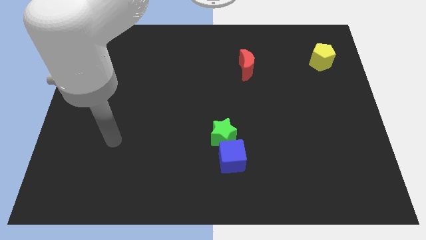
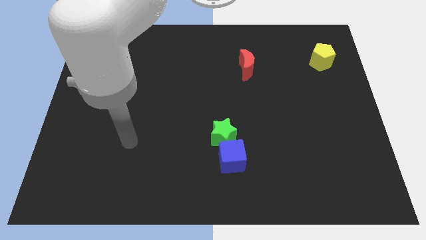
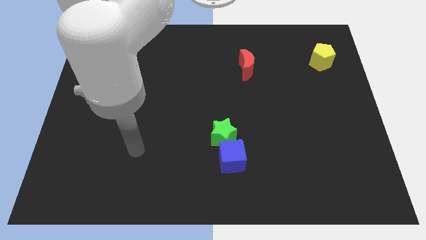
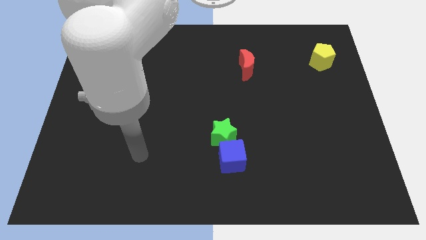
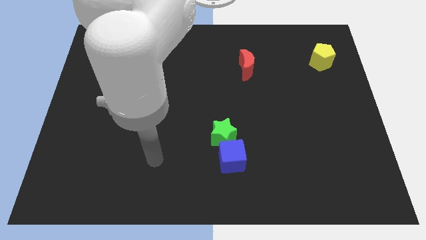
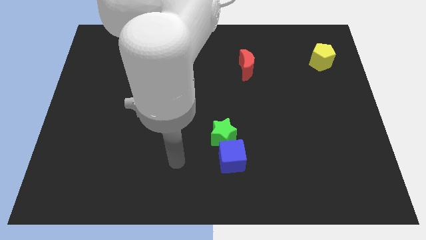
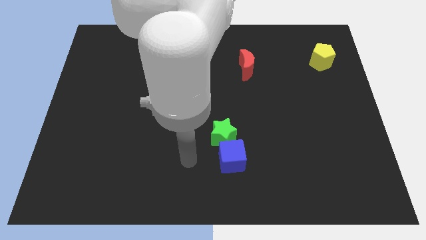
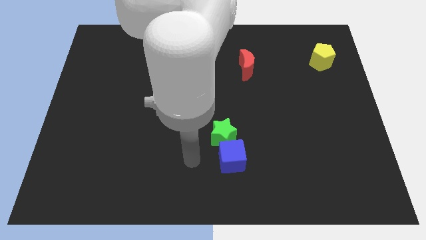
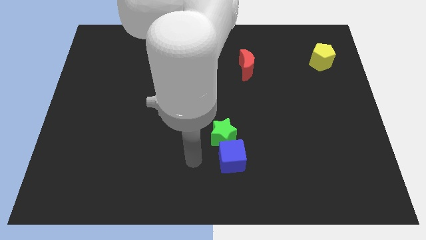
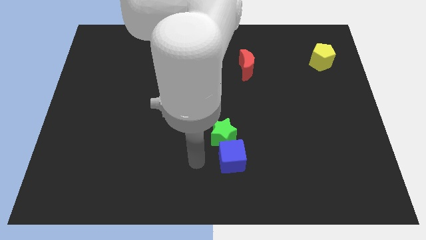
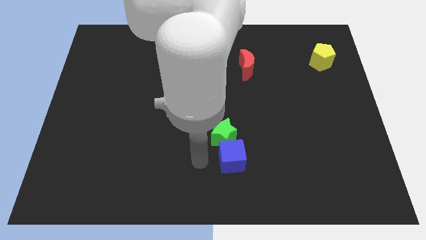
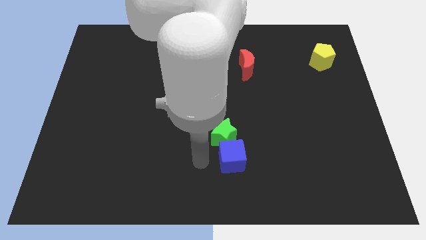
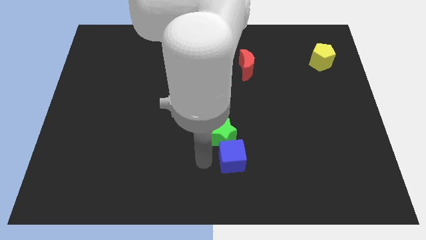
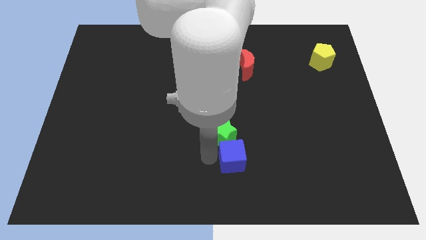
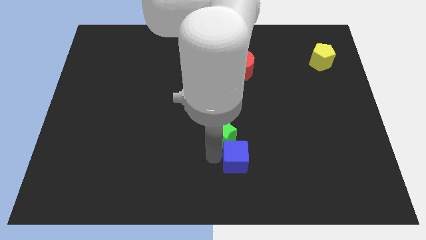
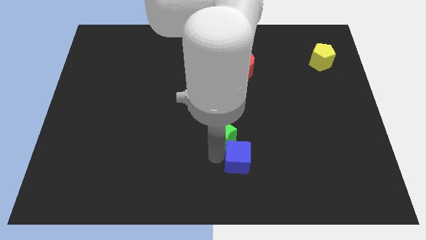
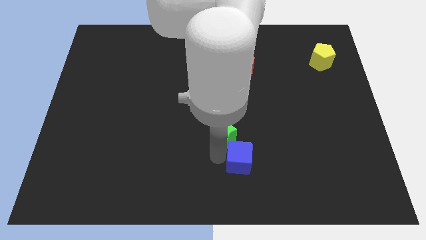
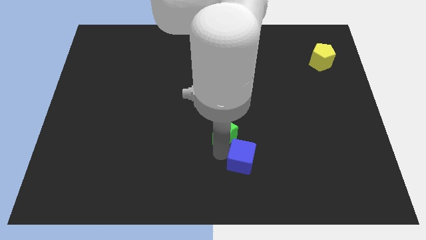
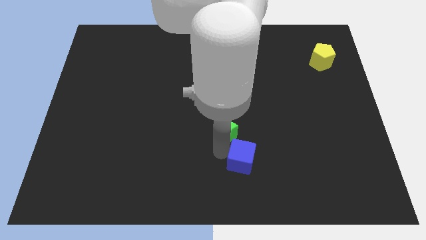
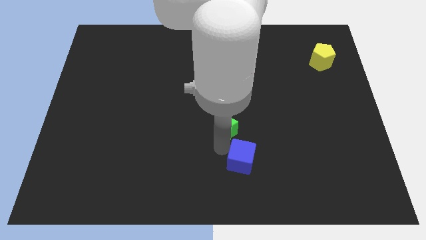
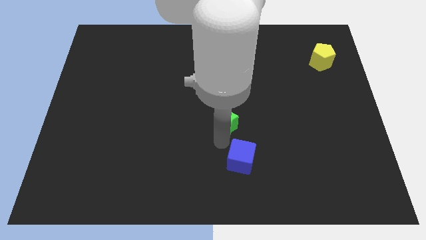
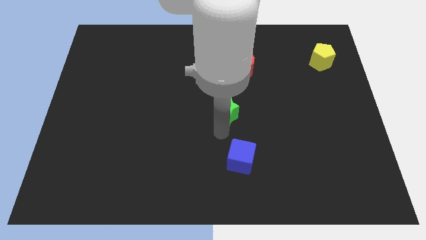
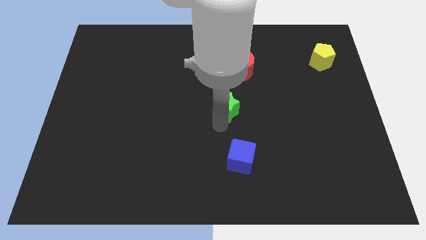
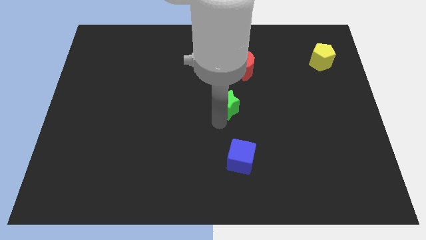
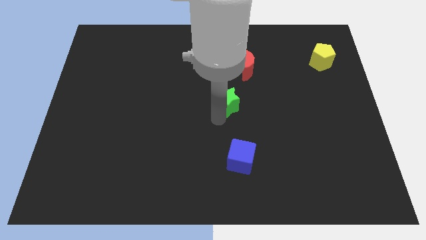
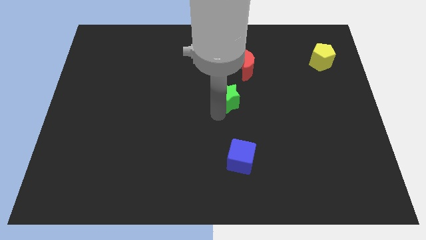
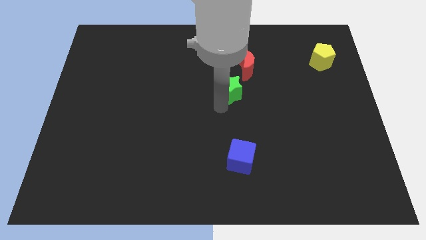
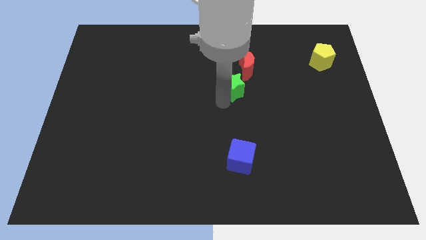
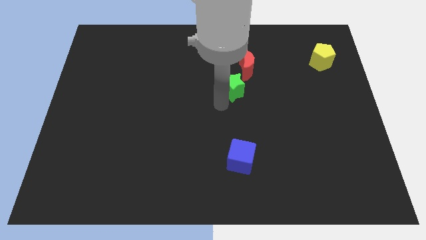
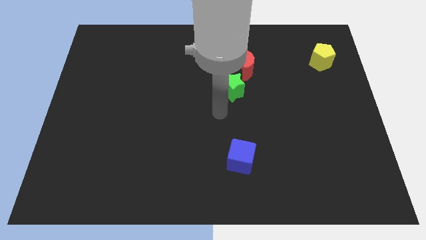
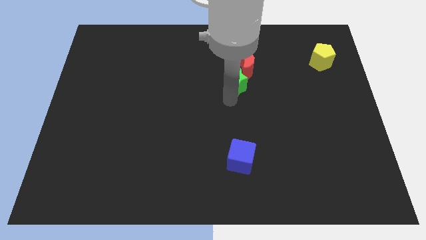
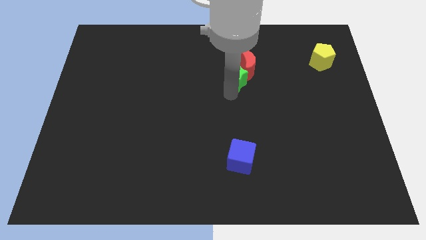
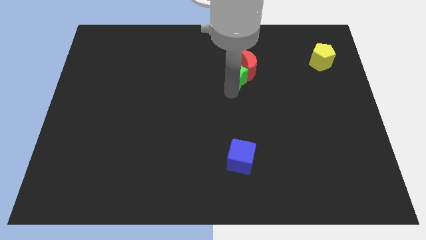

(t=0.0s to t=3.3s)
push the green block to the red block

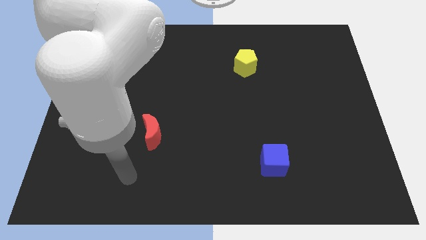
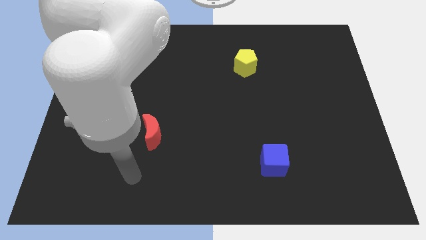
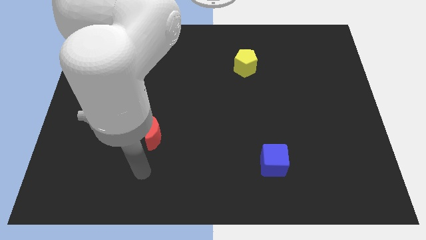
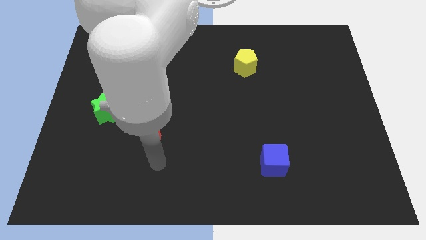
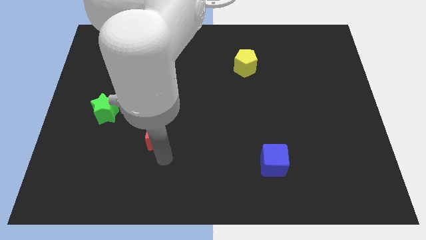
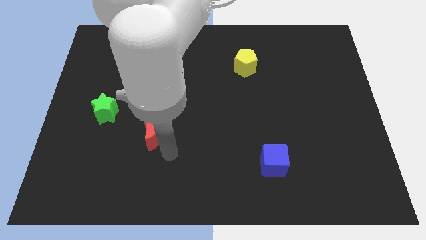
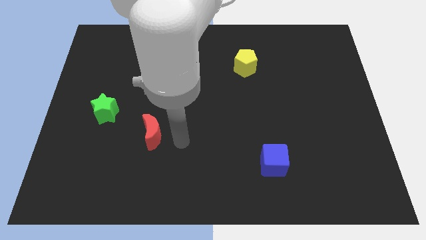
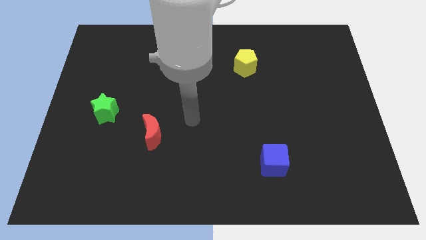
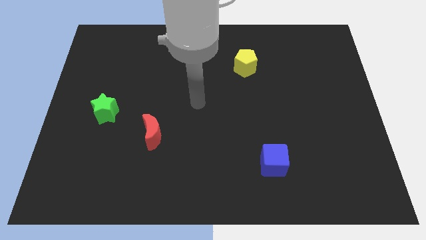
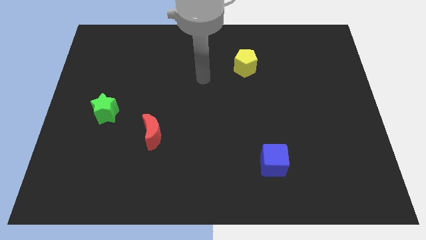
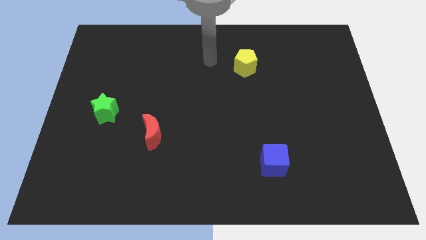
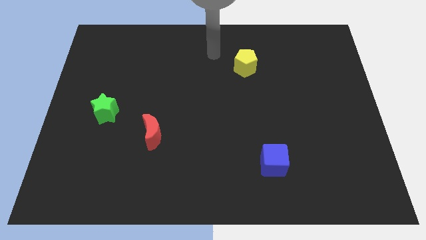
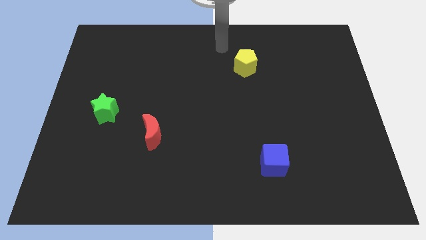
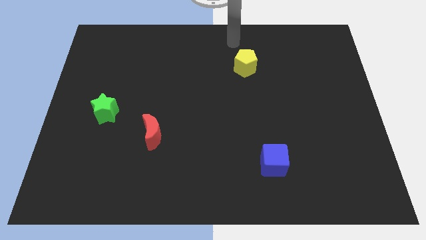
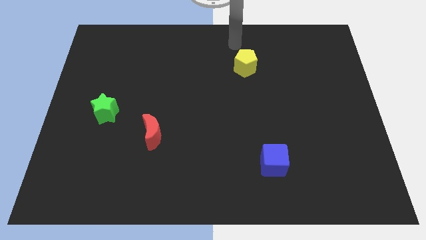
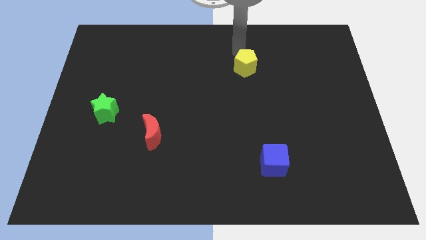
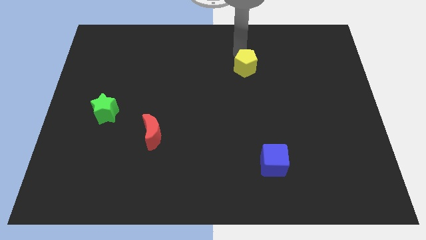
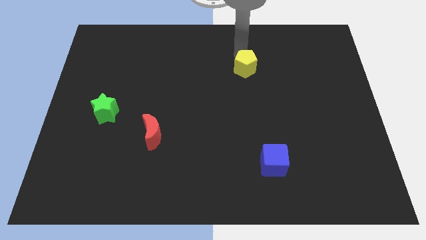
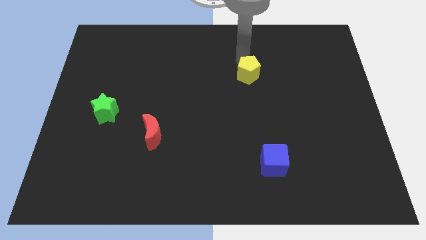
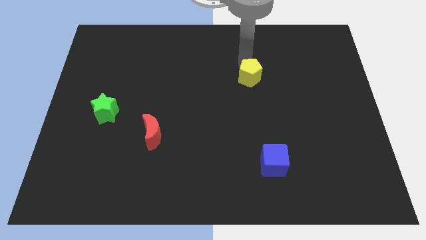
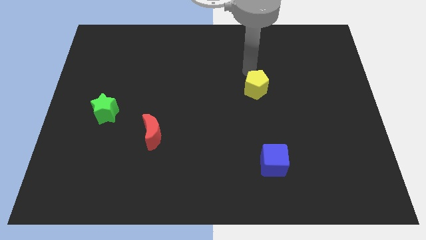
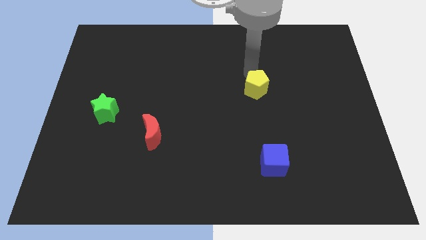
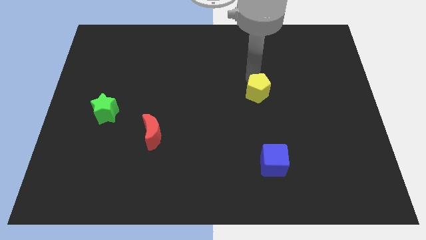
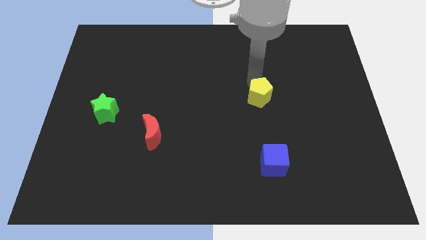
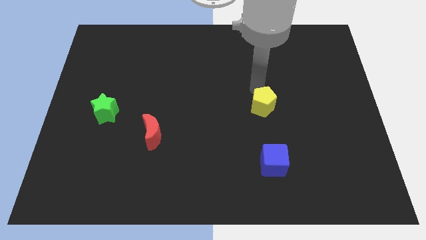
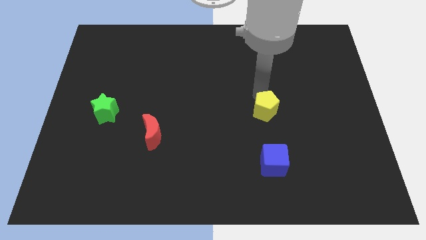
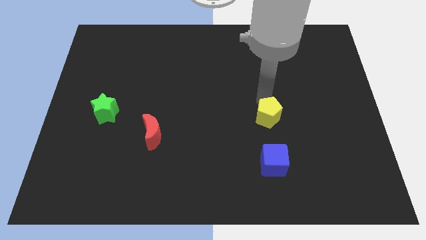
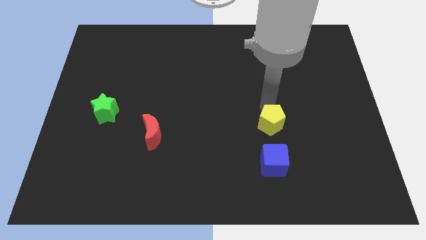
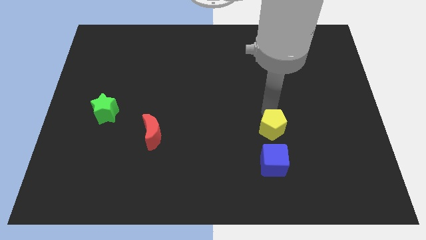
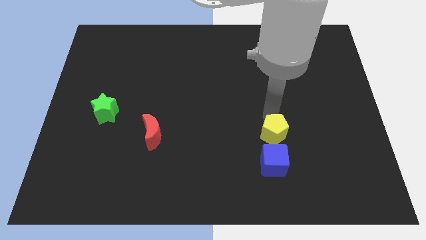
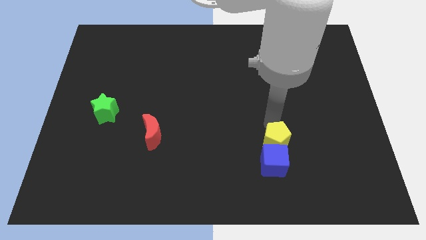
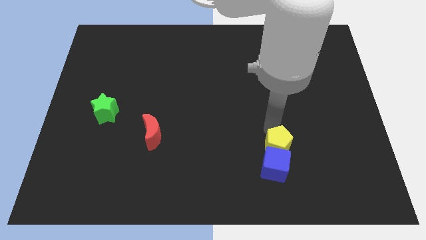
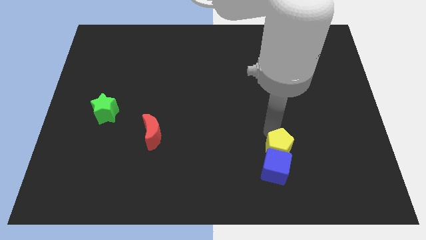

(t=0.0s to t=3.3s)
push the yellow pentagon next to the blue block

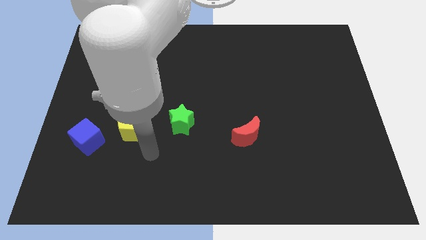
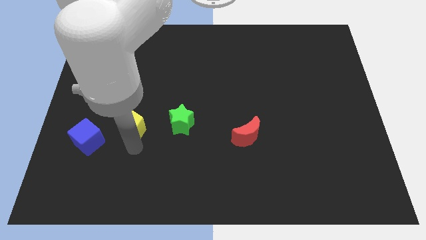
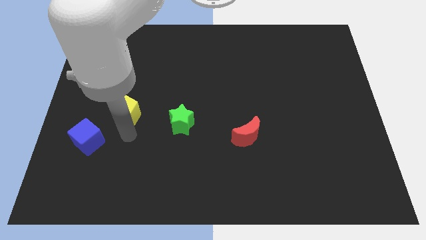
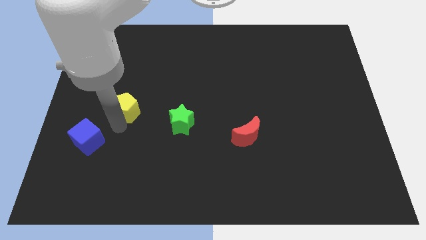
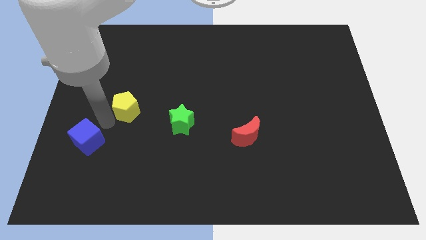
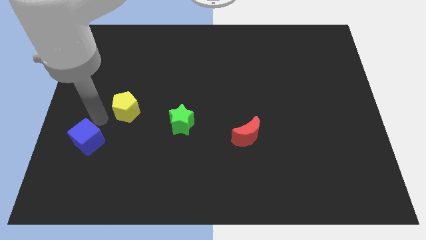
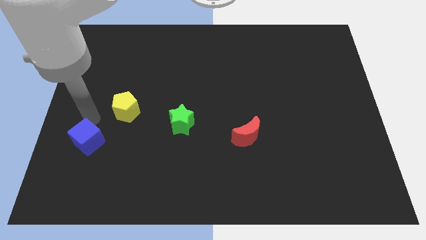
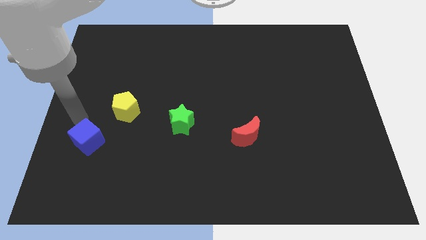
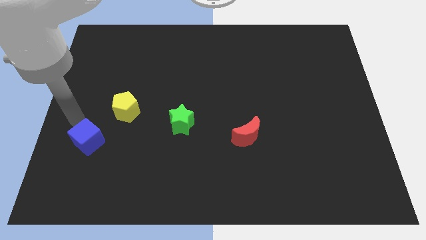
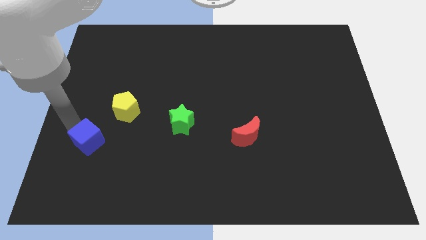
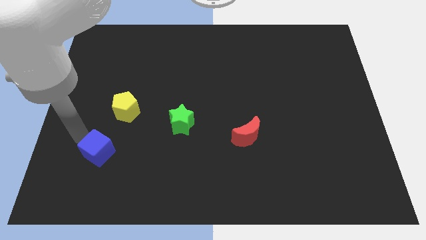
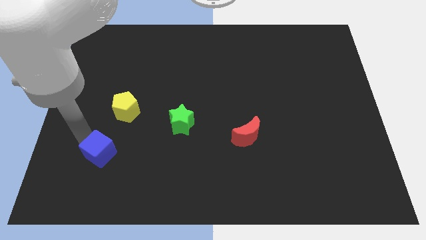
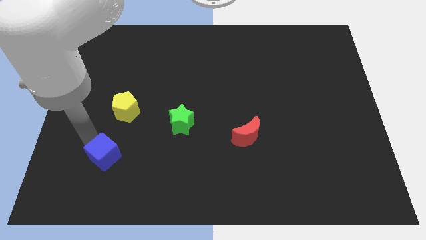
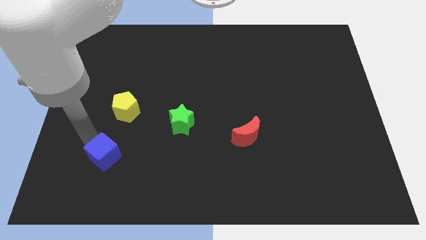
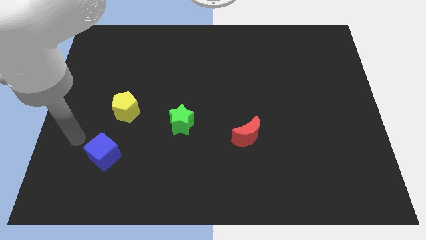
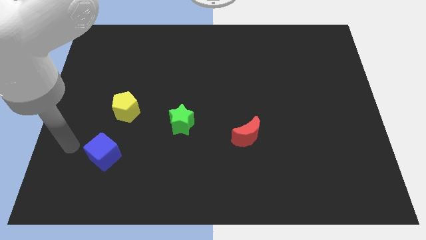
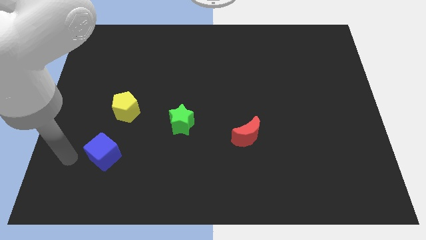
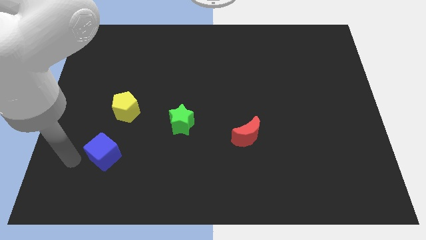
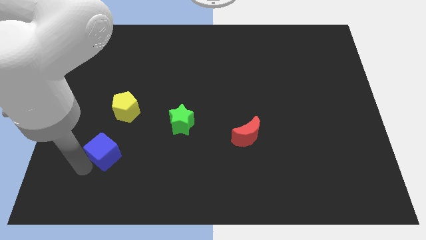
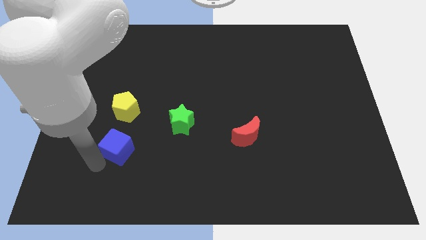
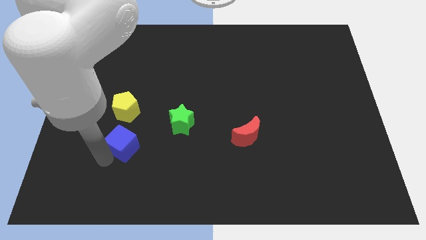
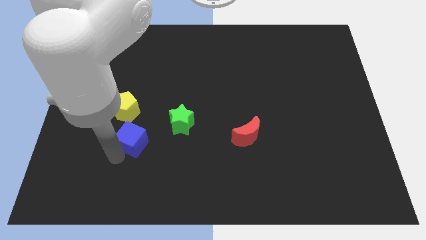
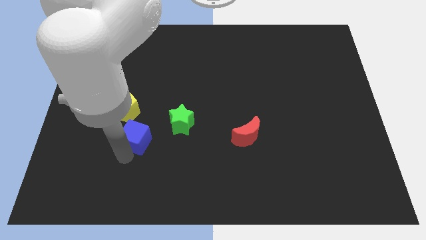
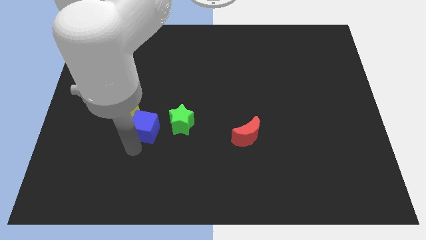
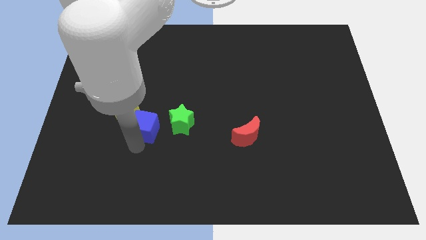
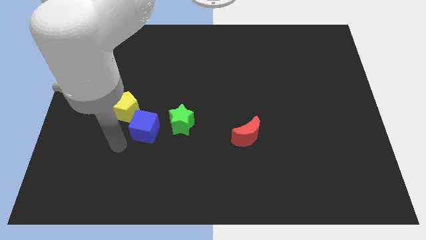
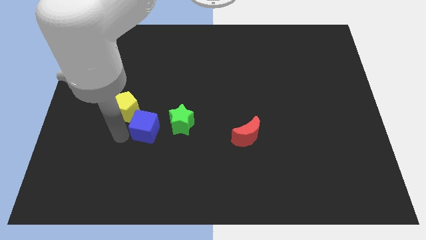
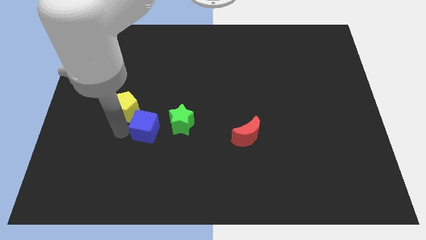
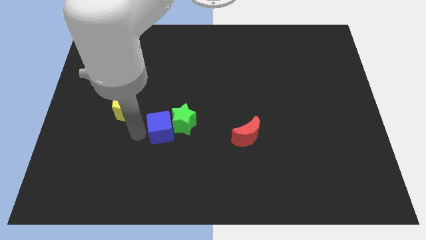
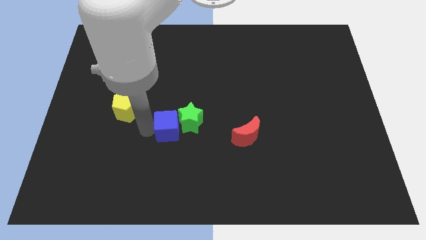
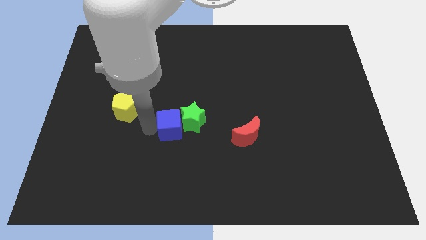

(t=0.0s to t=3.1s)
slide the blue cube close to the green star
